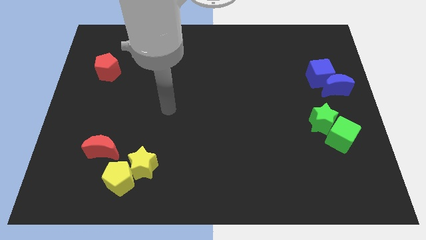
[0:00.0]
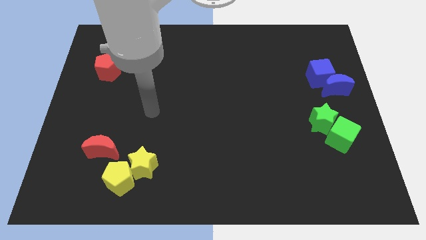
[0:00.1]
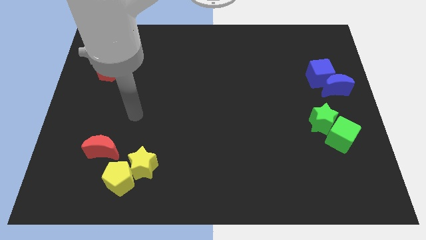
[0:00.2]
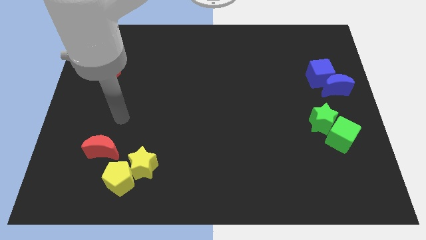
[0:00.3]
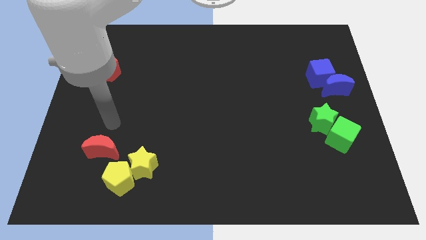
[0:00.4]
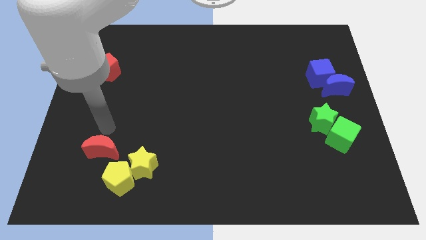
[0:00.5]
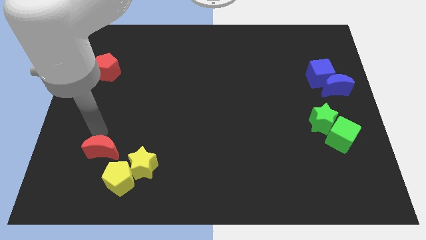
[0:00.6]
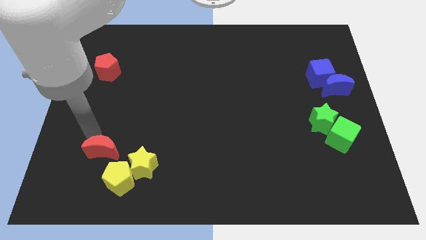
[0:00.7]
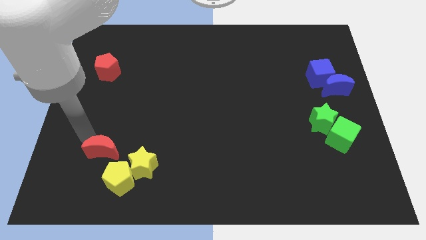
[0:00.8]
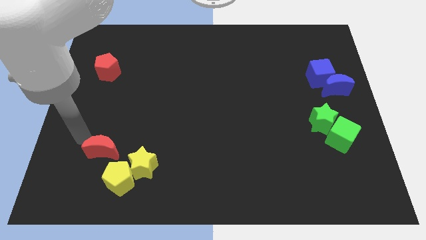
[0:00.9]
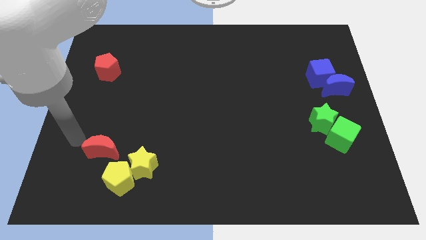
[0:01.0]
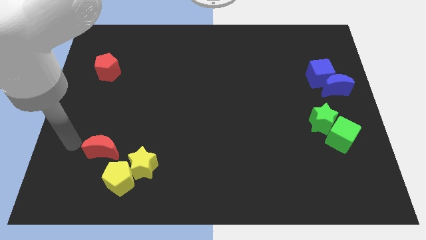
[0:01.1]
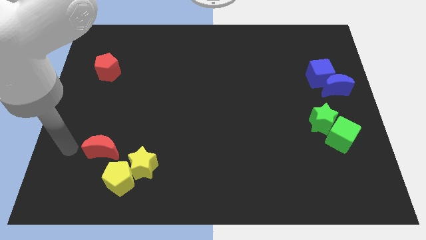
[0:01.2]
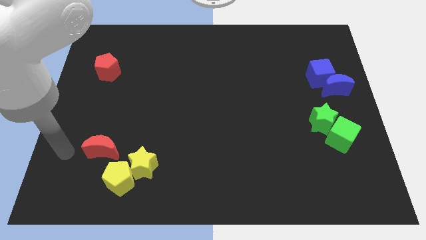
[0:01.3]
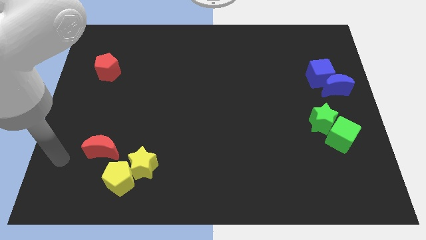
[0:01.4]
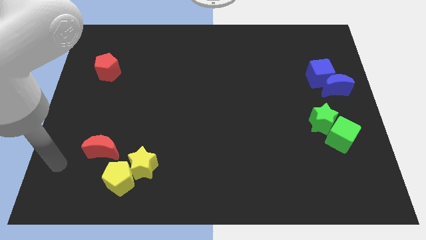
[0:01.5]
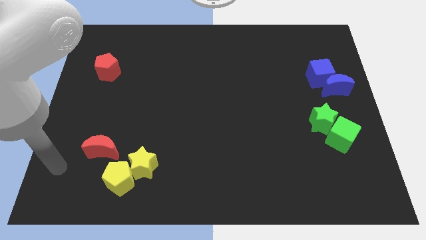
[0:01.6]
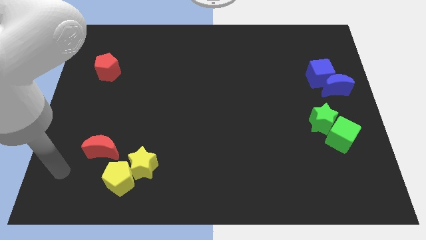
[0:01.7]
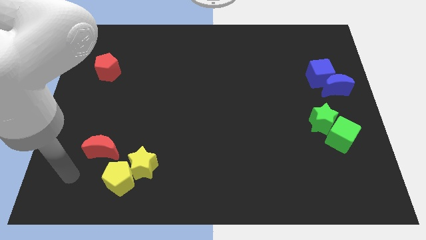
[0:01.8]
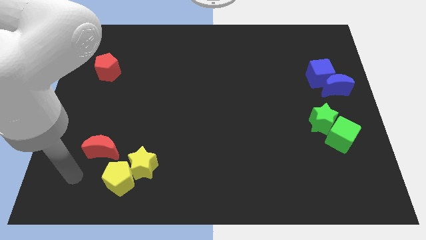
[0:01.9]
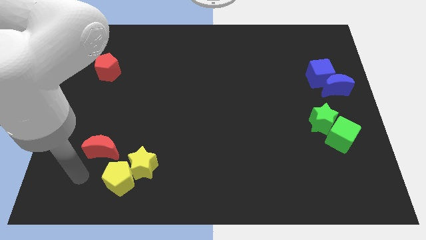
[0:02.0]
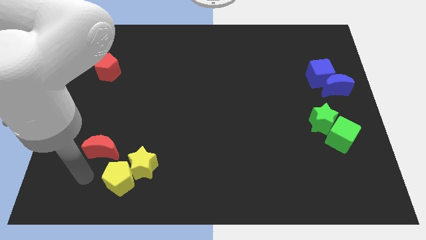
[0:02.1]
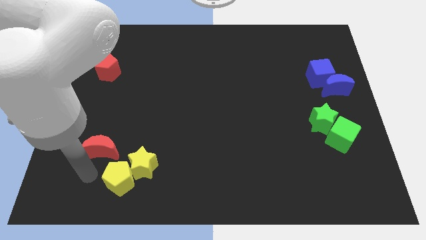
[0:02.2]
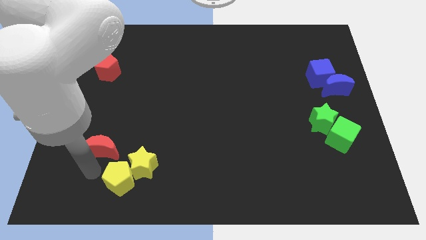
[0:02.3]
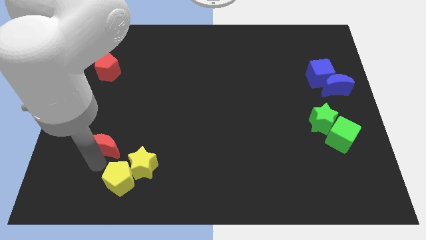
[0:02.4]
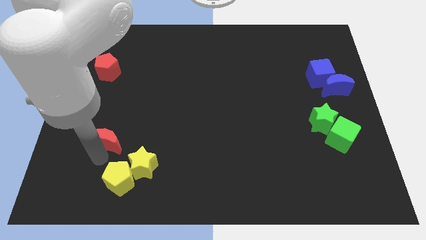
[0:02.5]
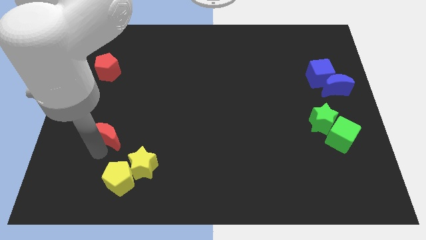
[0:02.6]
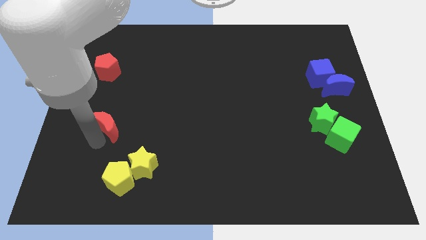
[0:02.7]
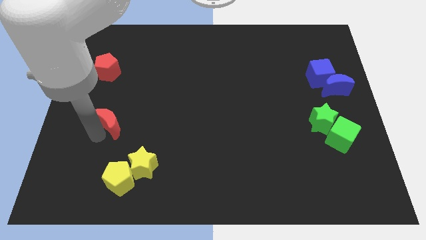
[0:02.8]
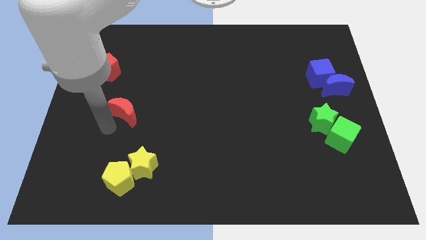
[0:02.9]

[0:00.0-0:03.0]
push the red crescent to the top of the yellow pentagon

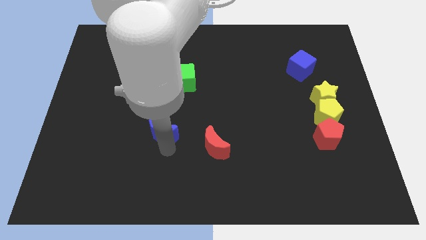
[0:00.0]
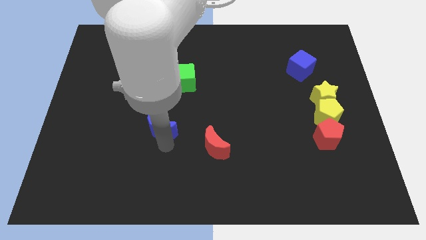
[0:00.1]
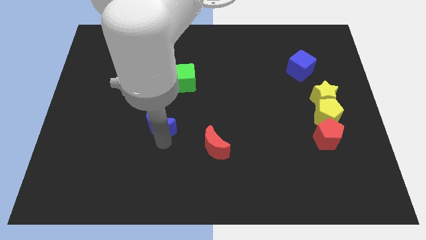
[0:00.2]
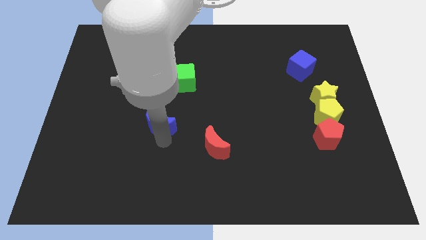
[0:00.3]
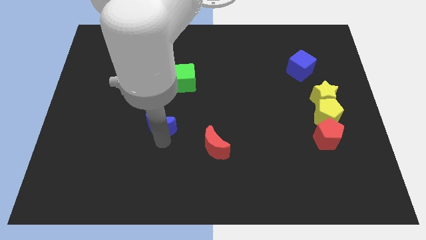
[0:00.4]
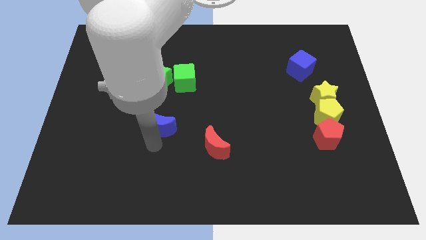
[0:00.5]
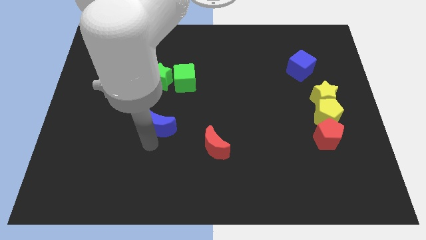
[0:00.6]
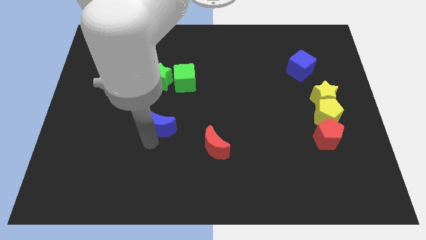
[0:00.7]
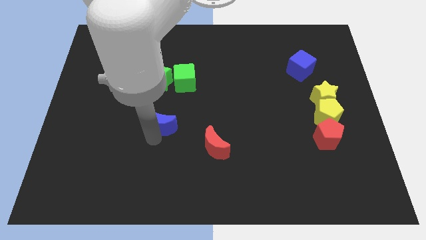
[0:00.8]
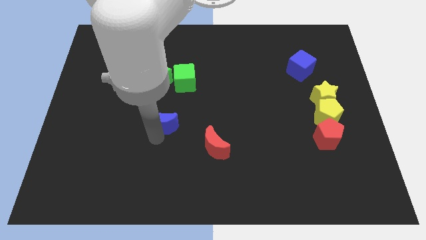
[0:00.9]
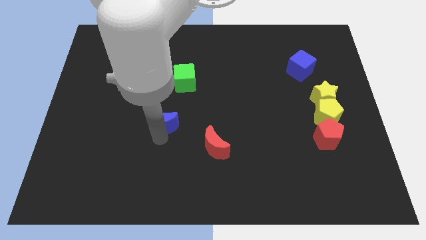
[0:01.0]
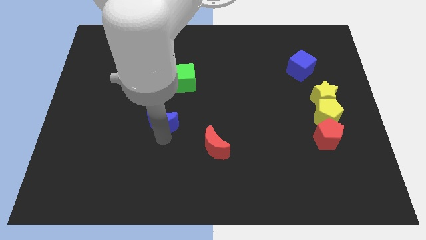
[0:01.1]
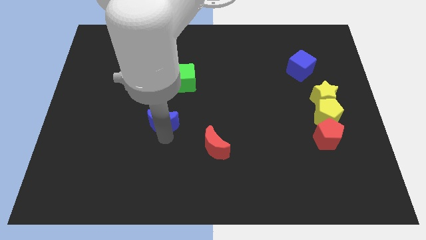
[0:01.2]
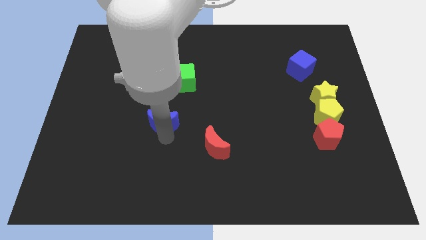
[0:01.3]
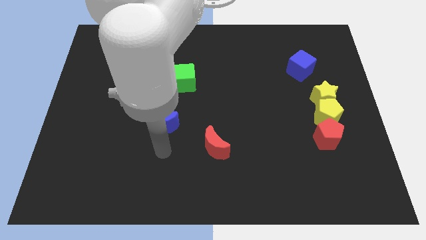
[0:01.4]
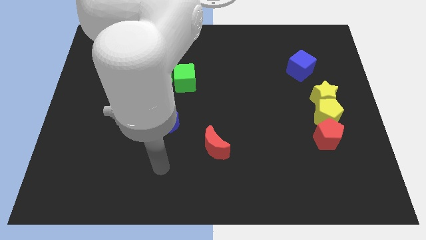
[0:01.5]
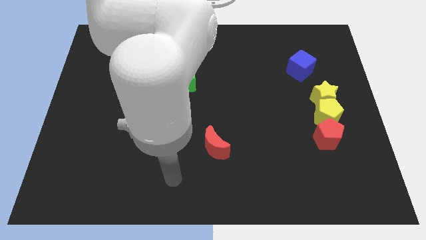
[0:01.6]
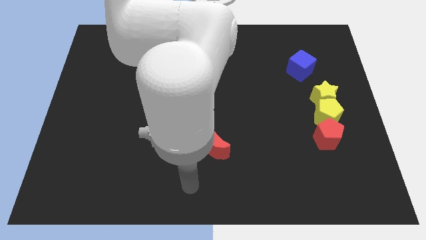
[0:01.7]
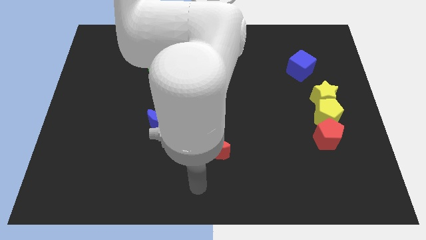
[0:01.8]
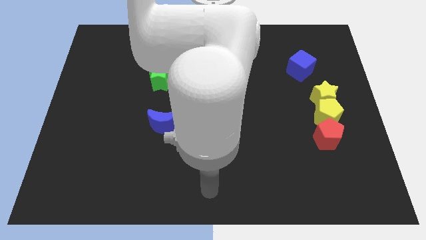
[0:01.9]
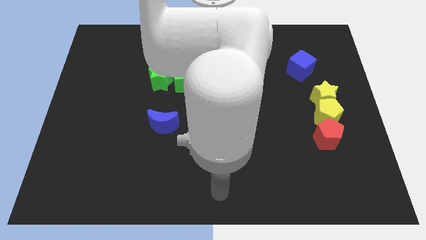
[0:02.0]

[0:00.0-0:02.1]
slide the blue moon slightly up

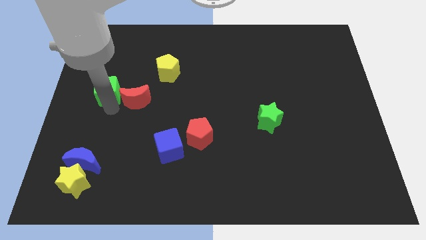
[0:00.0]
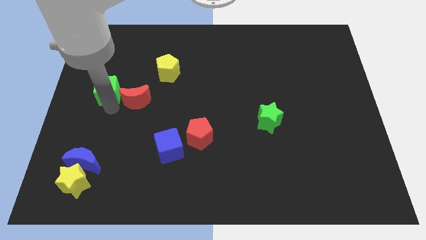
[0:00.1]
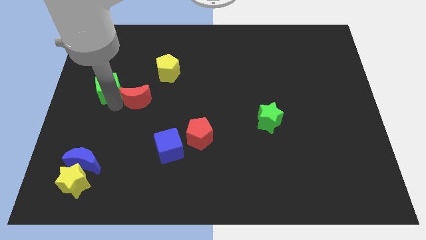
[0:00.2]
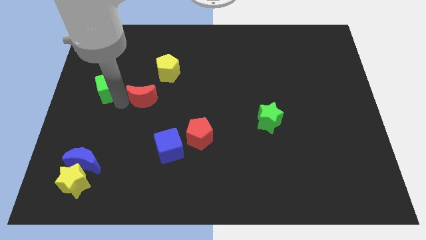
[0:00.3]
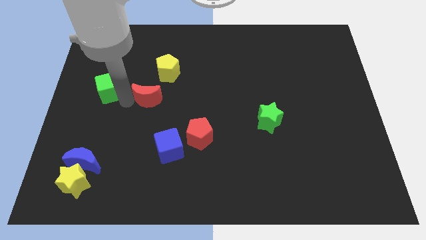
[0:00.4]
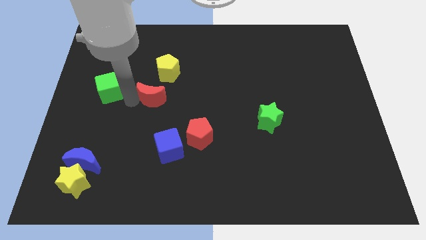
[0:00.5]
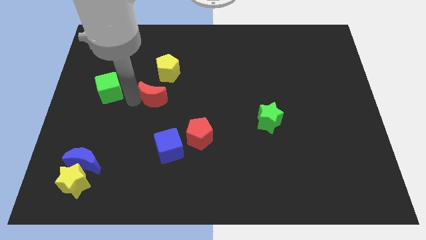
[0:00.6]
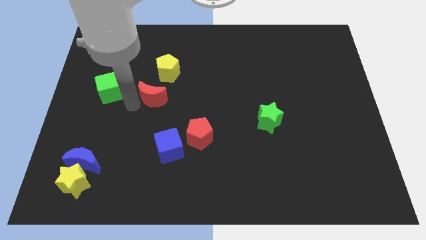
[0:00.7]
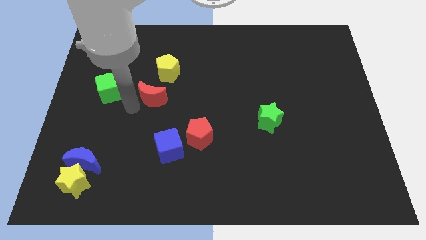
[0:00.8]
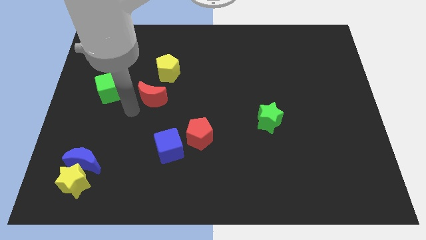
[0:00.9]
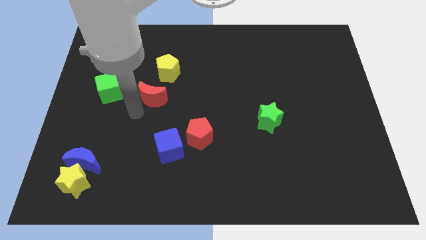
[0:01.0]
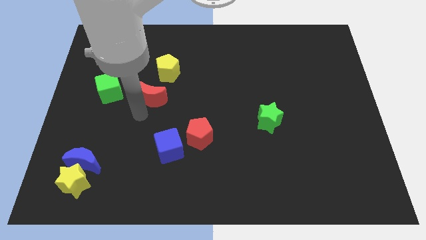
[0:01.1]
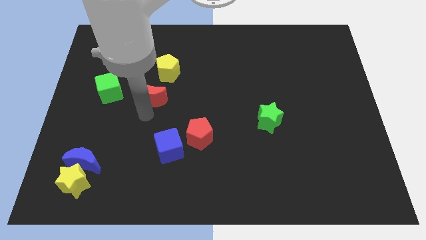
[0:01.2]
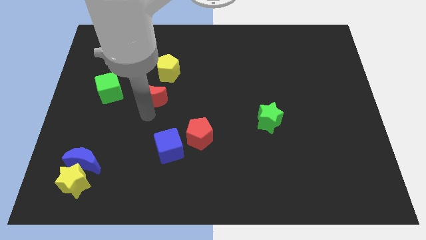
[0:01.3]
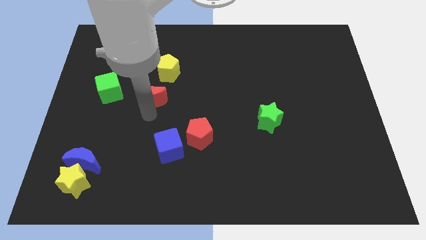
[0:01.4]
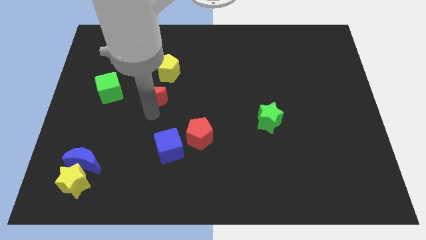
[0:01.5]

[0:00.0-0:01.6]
separate the red crescent from green cube

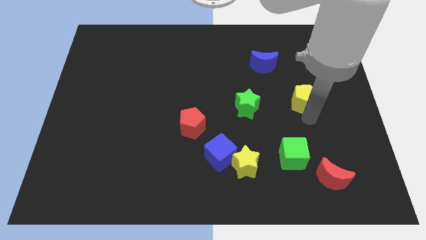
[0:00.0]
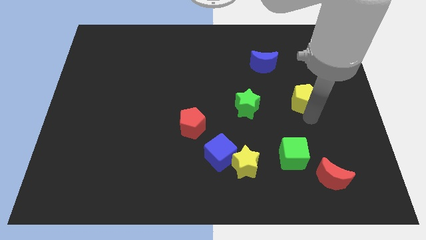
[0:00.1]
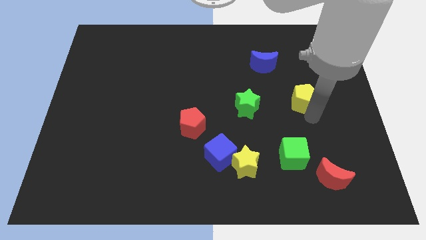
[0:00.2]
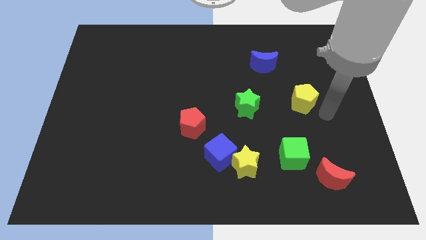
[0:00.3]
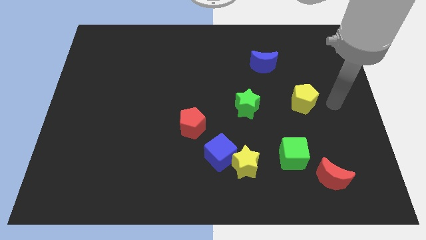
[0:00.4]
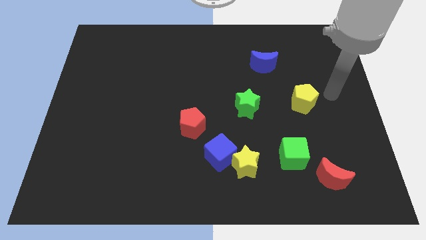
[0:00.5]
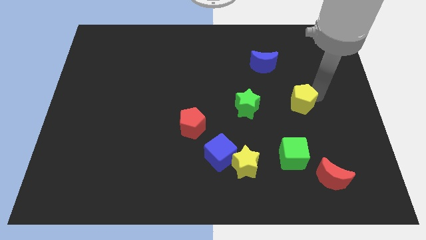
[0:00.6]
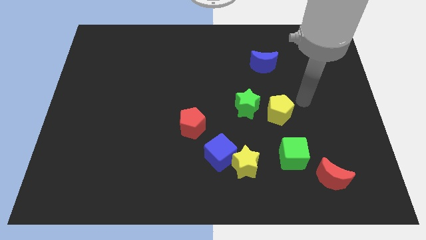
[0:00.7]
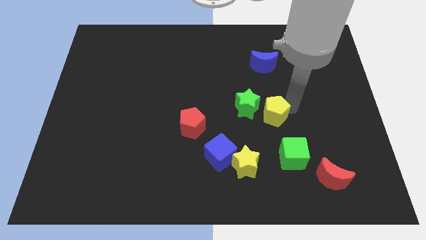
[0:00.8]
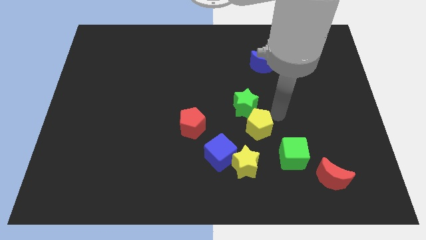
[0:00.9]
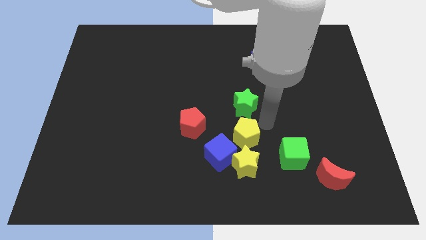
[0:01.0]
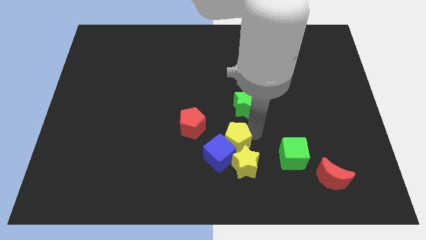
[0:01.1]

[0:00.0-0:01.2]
move yellow pentagon into the blue cube

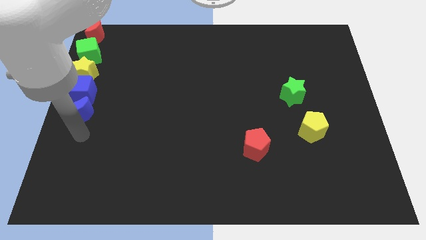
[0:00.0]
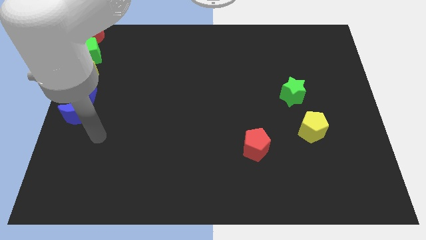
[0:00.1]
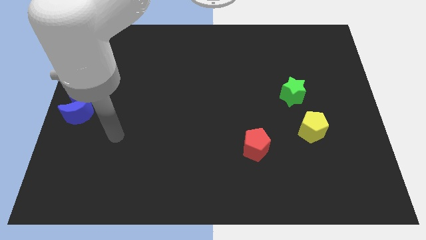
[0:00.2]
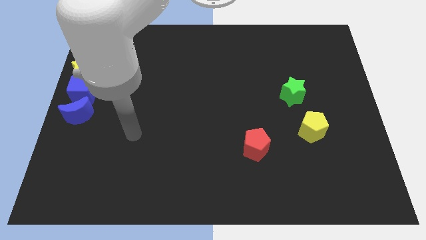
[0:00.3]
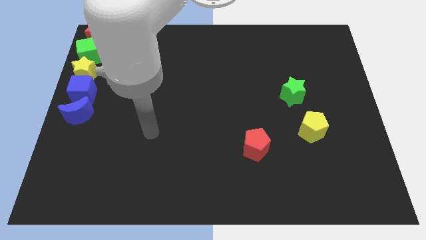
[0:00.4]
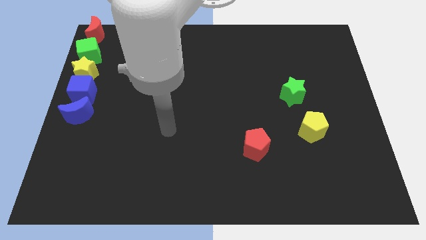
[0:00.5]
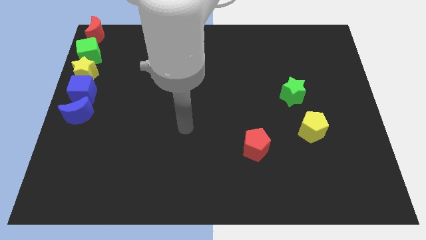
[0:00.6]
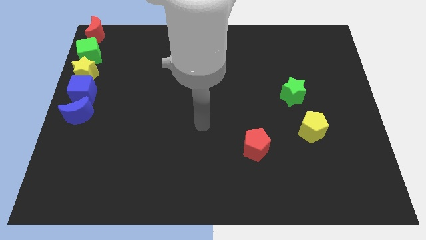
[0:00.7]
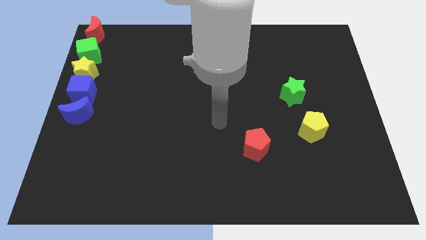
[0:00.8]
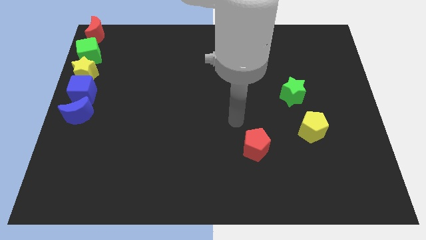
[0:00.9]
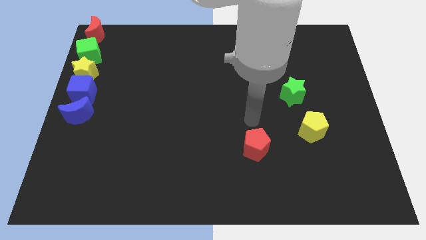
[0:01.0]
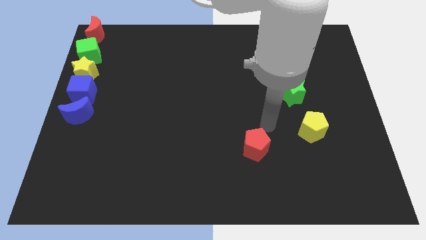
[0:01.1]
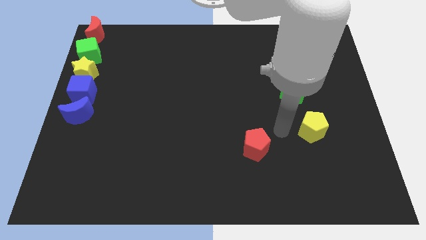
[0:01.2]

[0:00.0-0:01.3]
move your arm away from the blue moon
